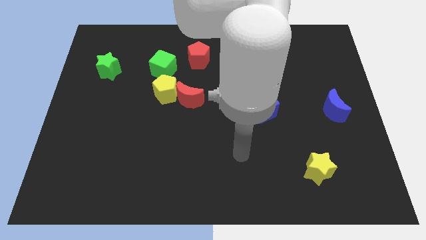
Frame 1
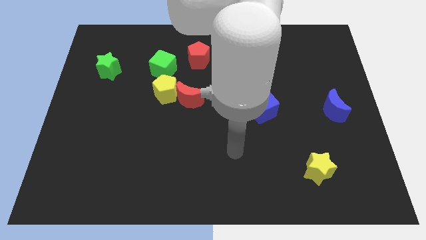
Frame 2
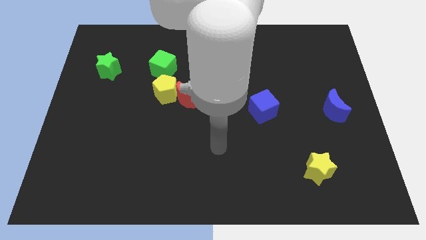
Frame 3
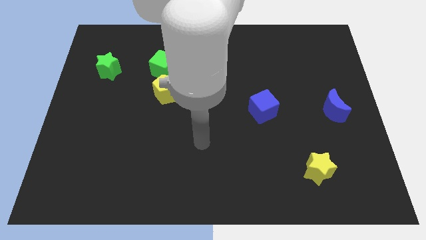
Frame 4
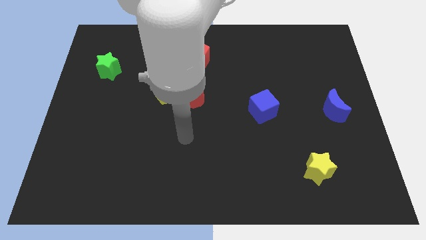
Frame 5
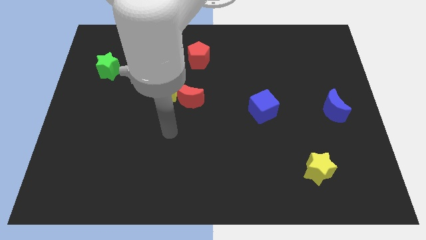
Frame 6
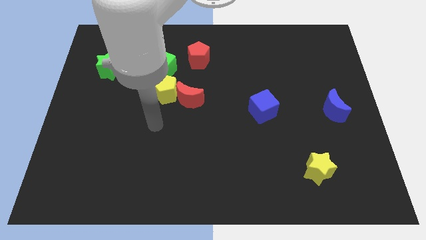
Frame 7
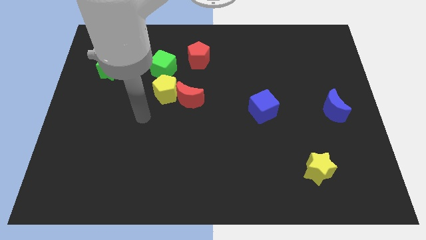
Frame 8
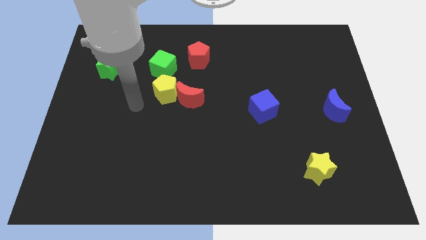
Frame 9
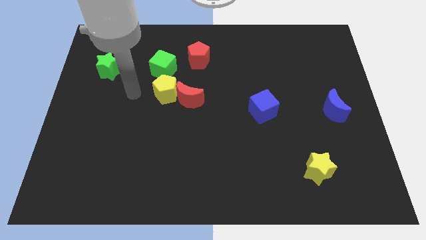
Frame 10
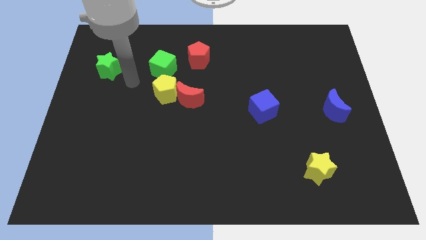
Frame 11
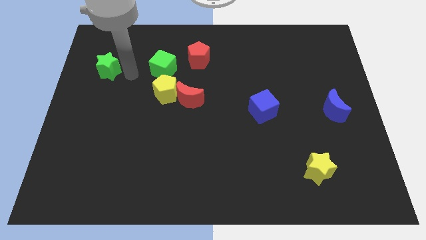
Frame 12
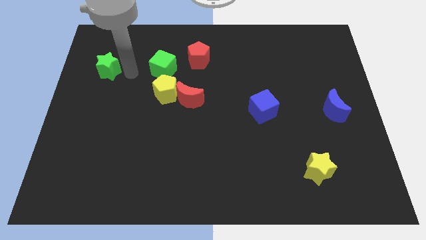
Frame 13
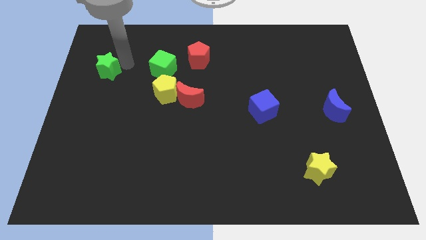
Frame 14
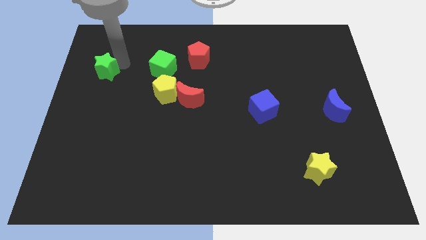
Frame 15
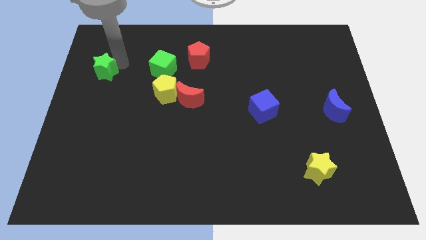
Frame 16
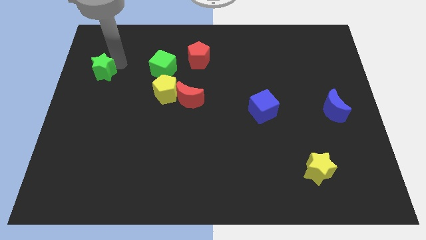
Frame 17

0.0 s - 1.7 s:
touch the green star

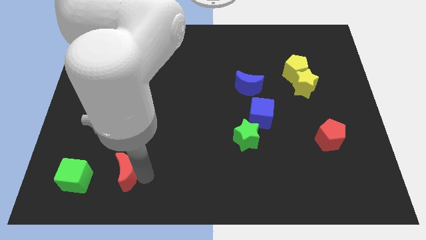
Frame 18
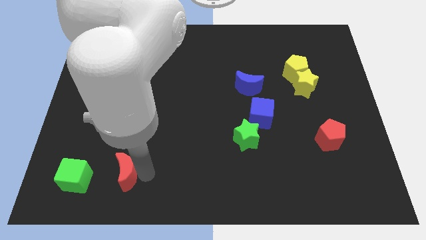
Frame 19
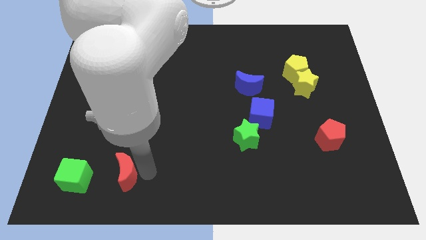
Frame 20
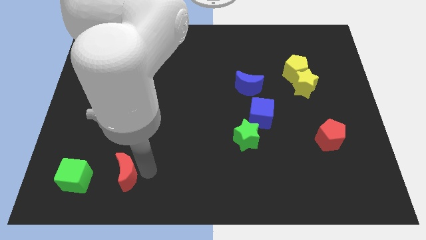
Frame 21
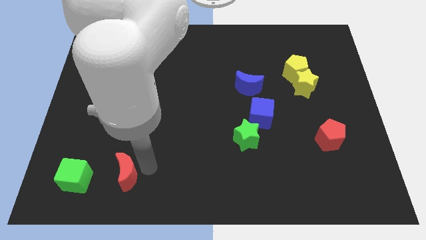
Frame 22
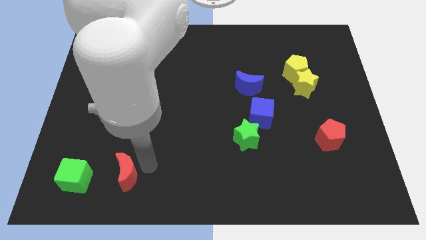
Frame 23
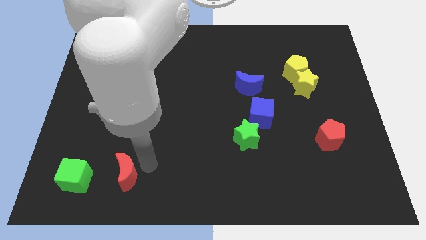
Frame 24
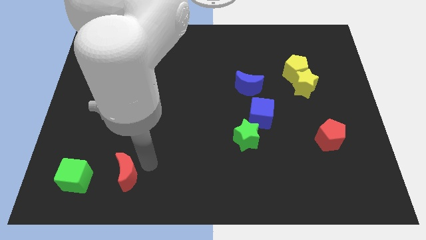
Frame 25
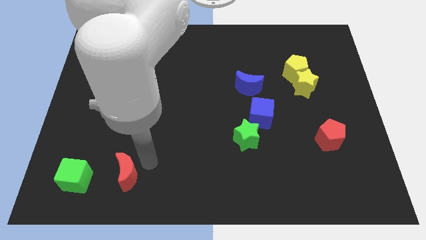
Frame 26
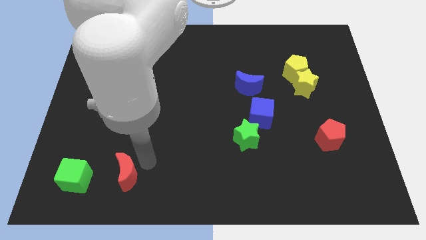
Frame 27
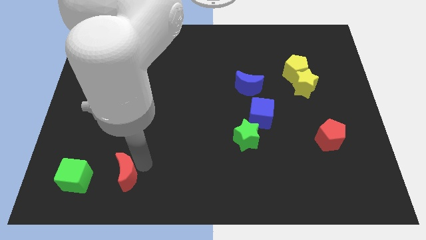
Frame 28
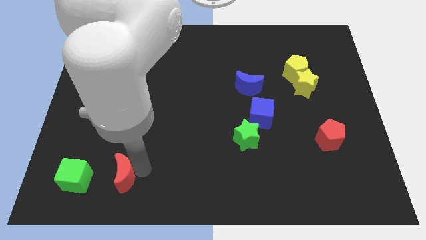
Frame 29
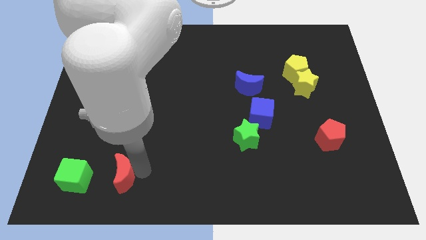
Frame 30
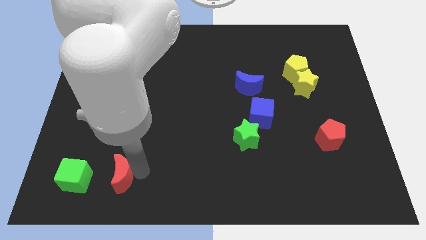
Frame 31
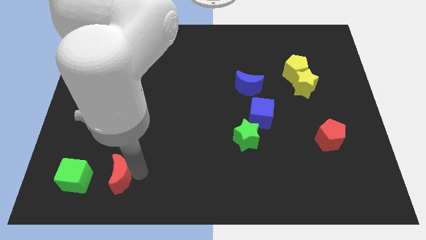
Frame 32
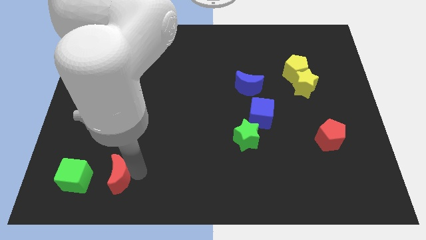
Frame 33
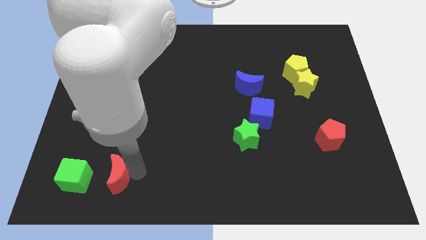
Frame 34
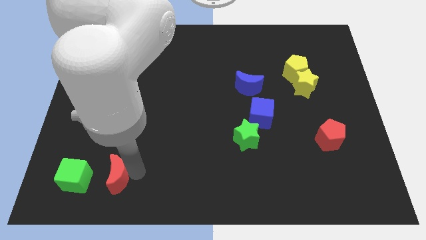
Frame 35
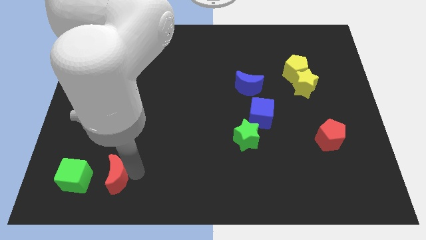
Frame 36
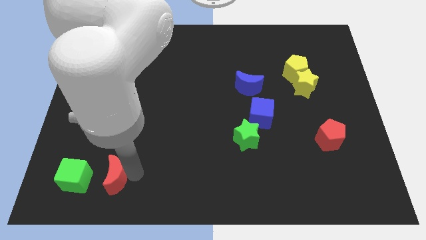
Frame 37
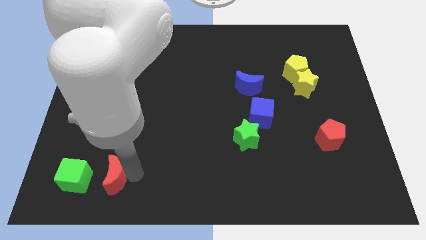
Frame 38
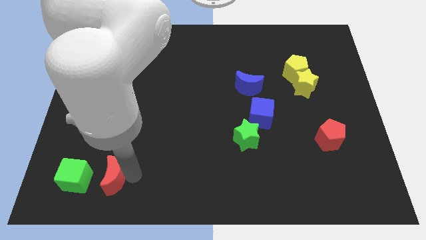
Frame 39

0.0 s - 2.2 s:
push the red crescent to the right of the green cube

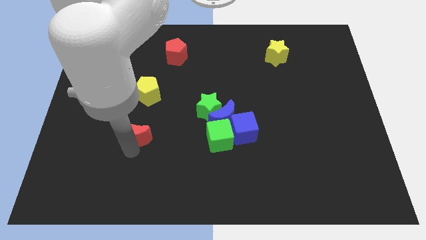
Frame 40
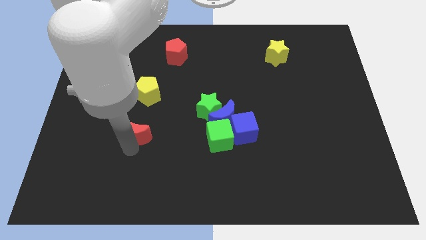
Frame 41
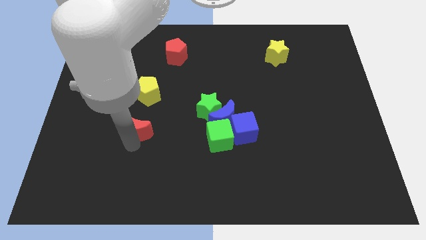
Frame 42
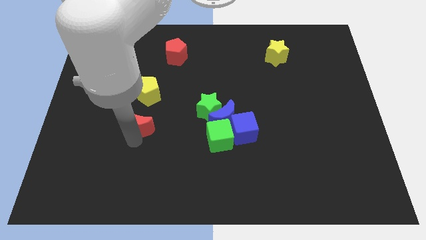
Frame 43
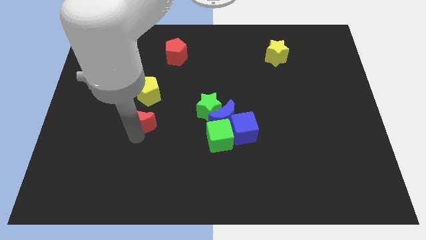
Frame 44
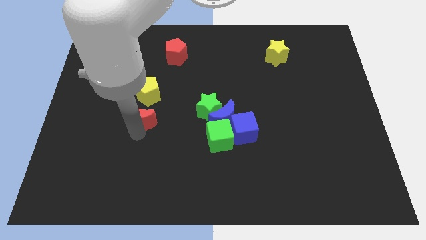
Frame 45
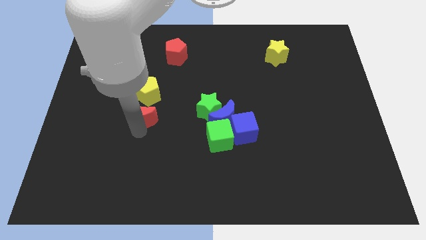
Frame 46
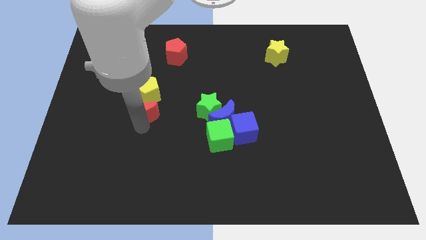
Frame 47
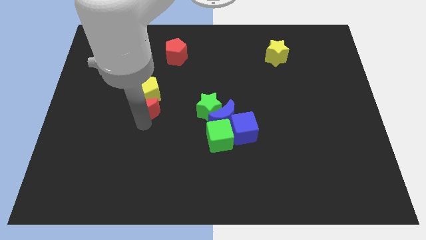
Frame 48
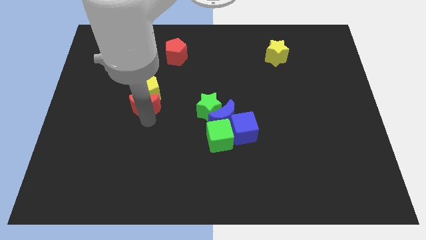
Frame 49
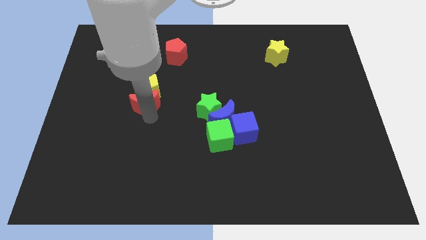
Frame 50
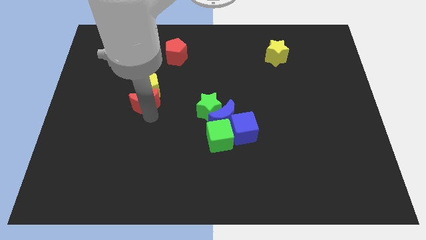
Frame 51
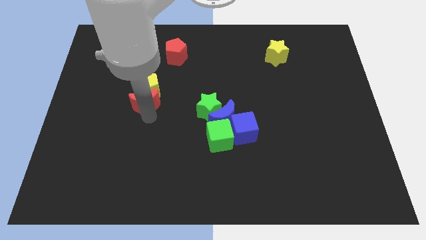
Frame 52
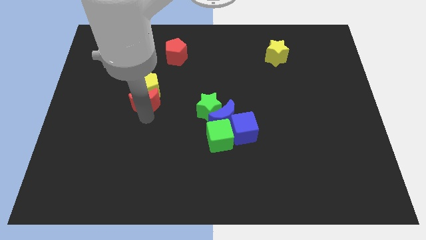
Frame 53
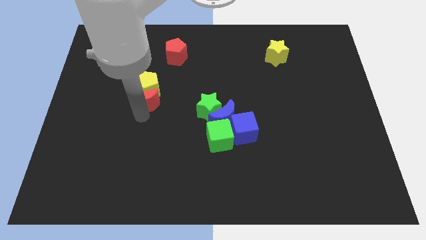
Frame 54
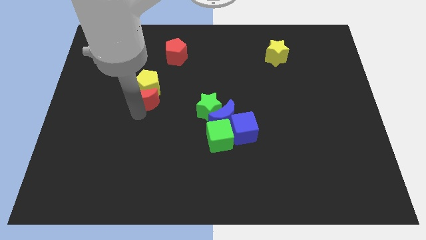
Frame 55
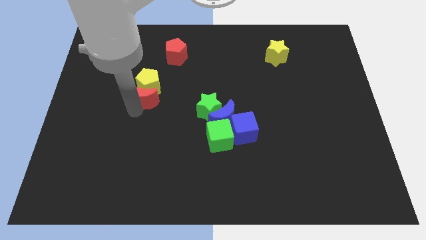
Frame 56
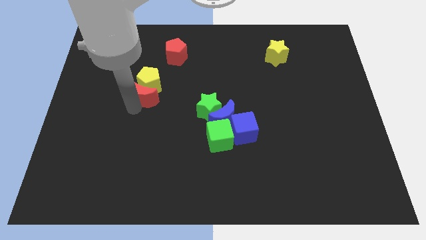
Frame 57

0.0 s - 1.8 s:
slide the red crescent into the yellow pentagon

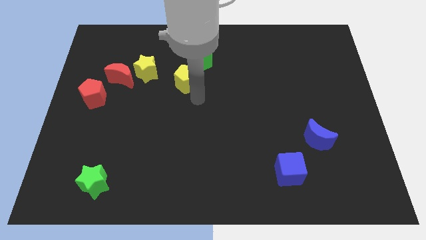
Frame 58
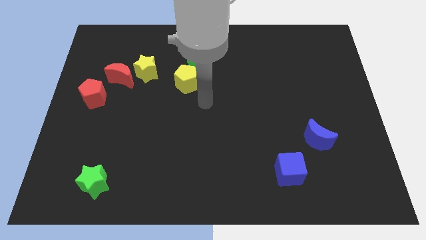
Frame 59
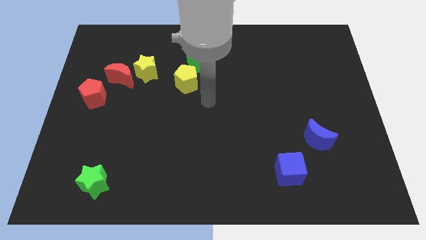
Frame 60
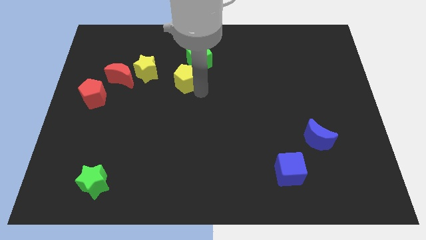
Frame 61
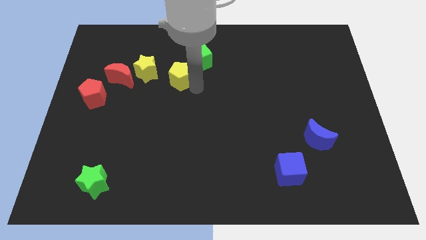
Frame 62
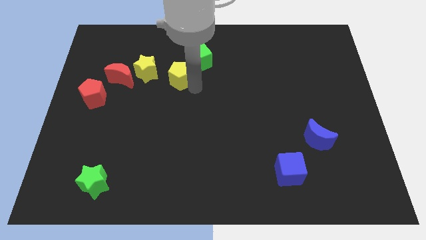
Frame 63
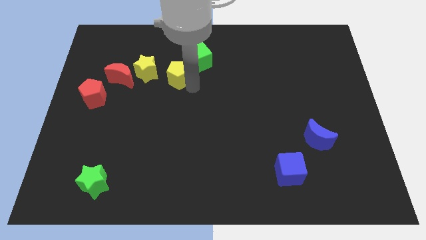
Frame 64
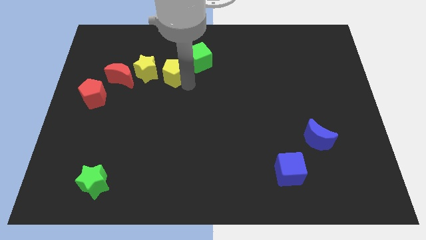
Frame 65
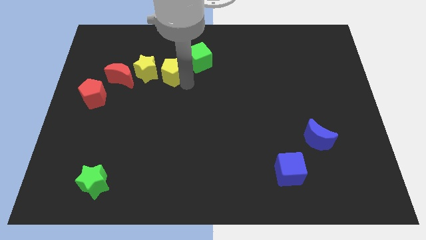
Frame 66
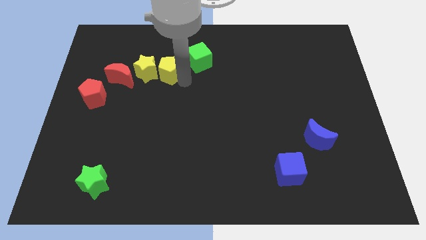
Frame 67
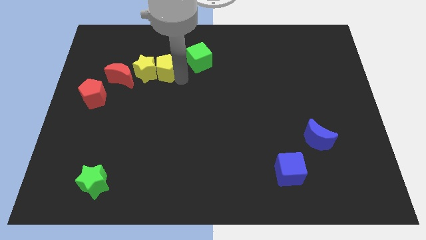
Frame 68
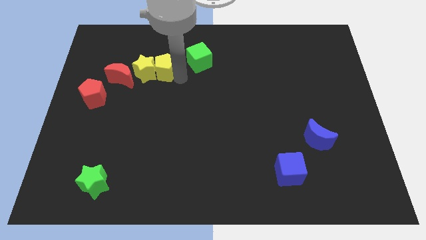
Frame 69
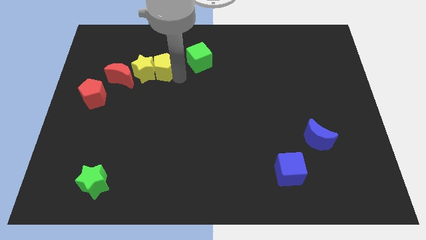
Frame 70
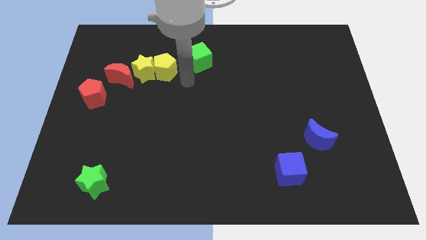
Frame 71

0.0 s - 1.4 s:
move the yellow pentagon into the yellow star

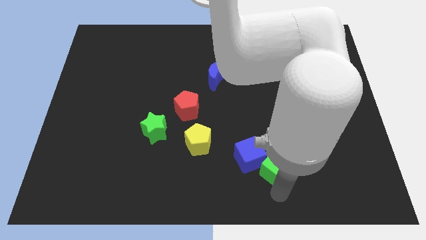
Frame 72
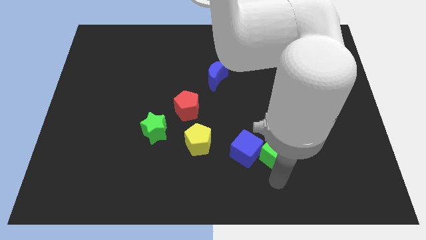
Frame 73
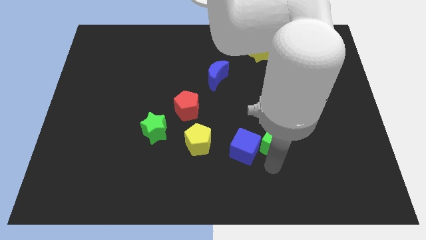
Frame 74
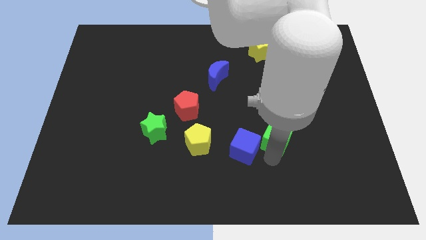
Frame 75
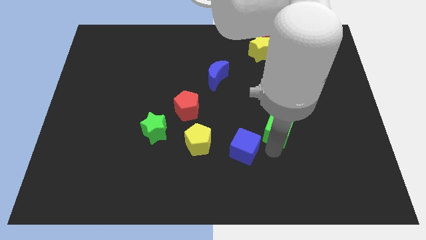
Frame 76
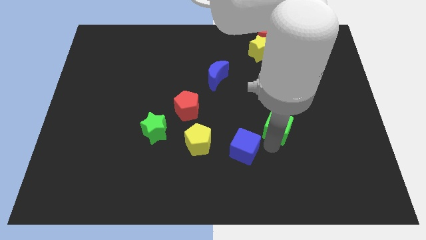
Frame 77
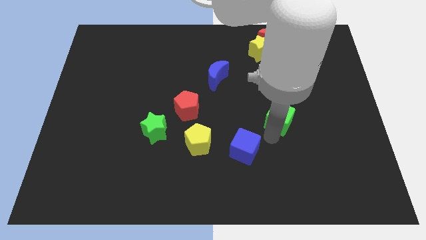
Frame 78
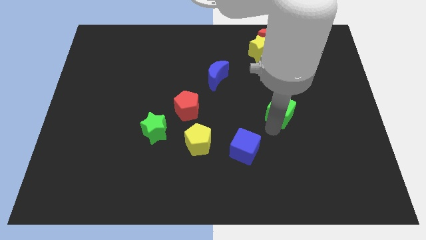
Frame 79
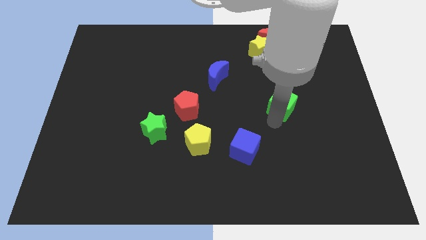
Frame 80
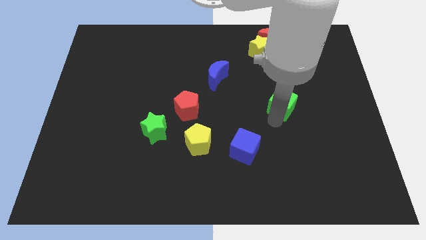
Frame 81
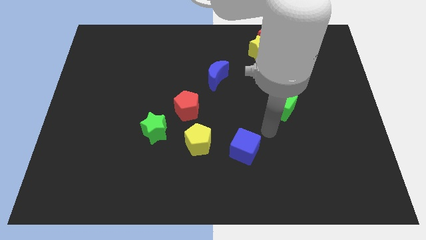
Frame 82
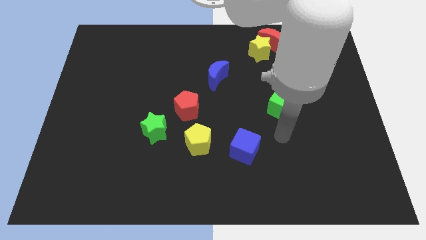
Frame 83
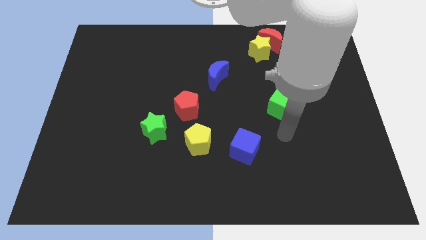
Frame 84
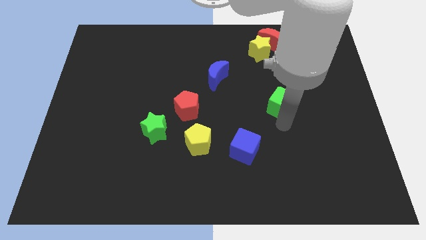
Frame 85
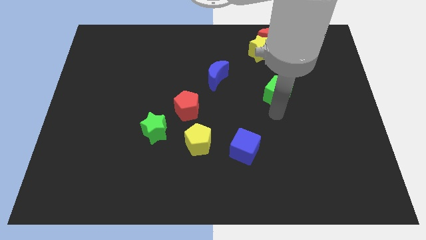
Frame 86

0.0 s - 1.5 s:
separate the green cube from the blue cube

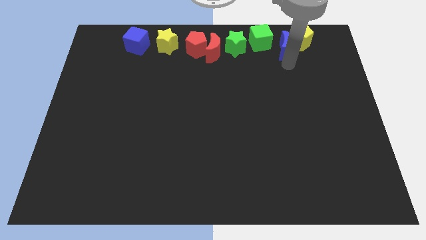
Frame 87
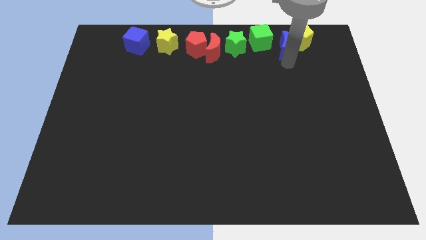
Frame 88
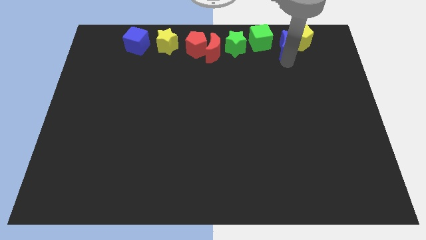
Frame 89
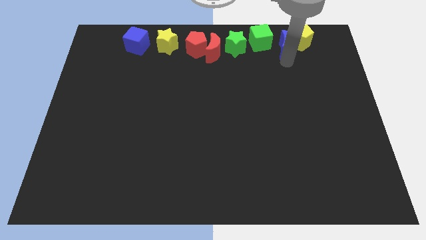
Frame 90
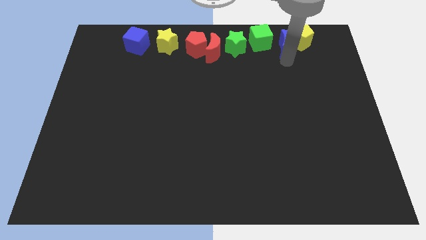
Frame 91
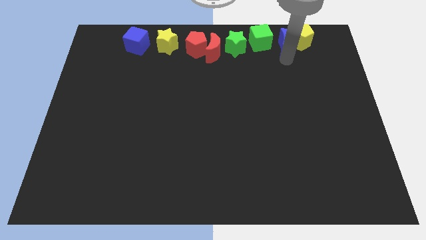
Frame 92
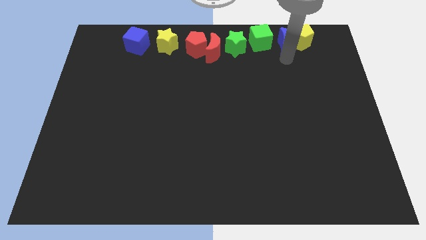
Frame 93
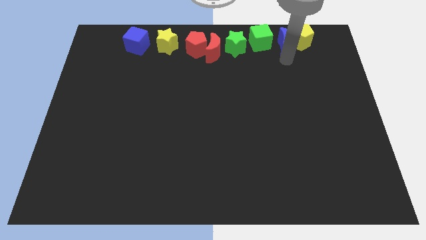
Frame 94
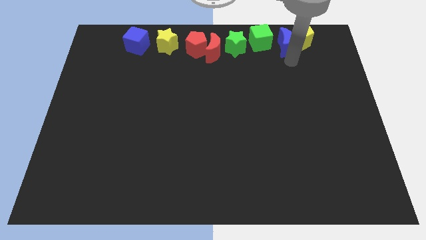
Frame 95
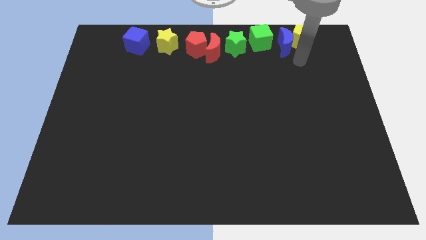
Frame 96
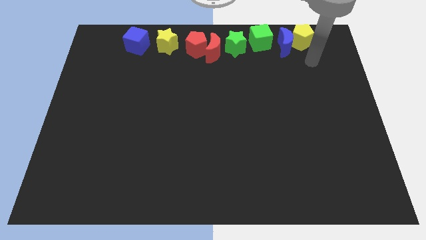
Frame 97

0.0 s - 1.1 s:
place the blue crescent in between the yellow pentagon and green cube
